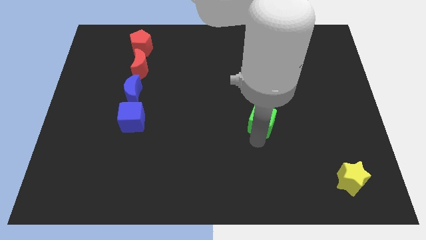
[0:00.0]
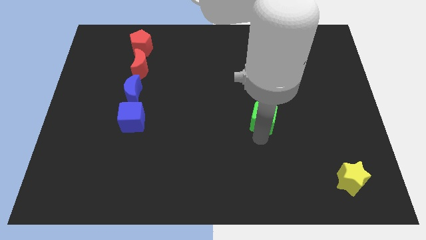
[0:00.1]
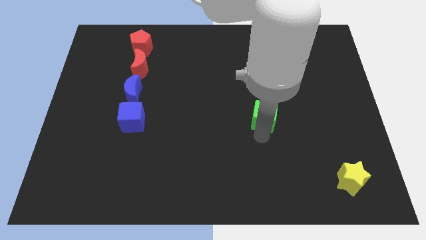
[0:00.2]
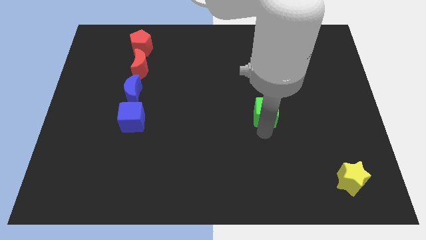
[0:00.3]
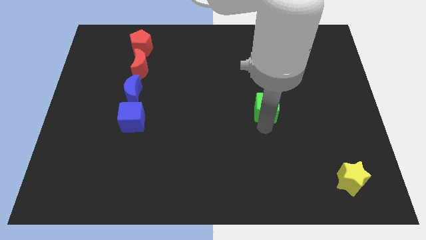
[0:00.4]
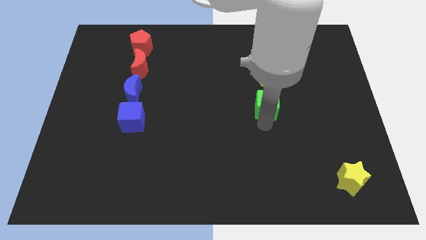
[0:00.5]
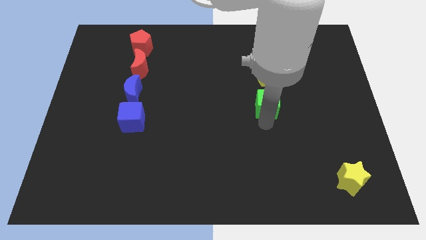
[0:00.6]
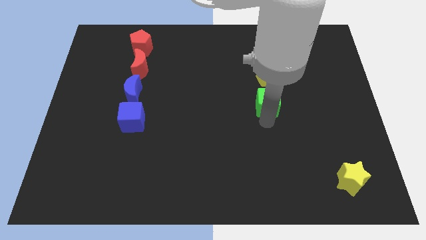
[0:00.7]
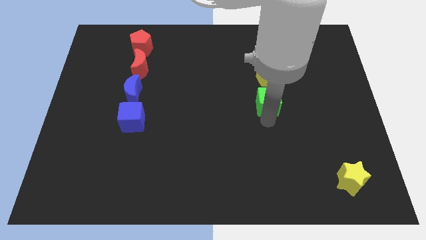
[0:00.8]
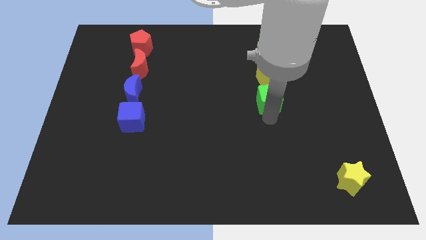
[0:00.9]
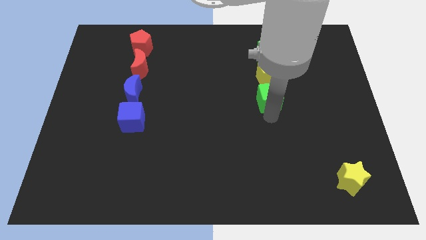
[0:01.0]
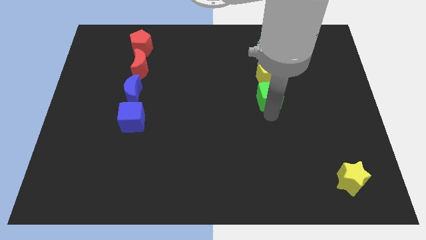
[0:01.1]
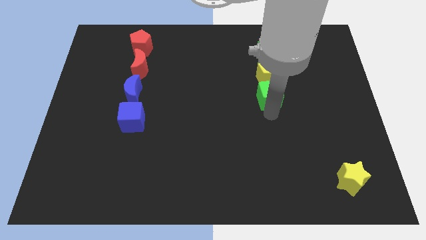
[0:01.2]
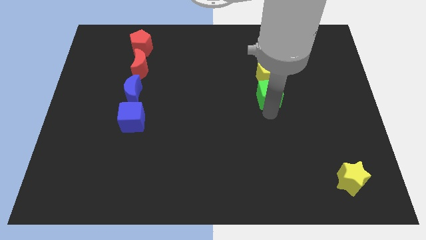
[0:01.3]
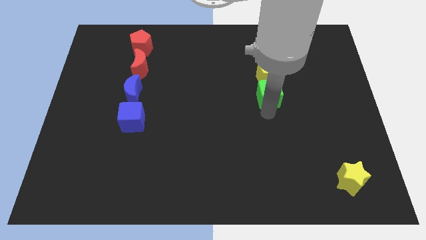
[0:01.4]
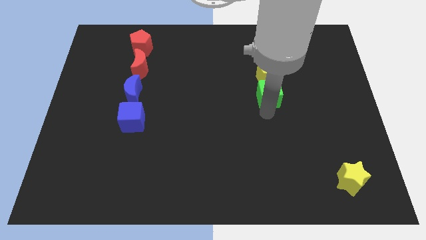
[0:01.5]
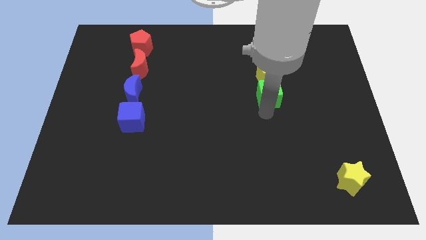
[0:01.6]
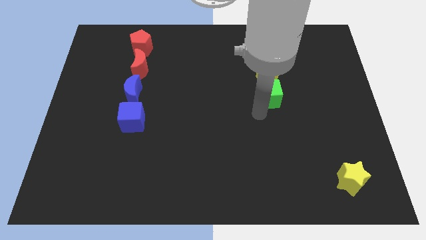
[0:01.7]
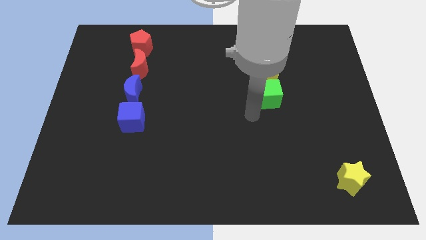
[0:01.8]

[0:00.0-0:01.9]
push green cube below yellow pentagon

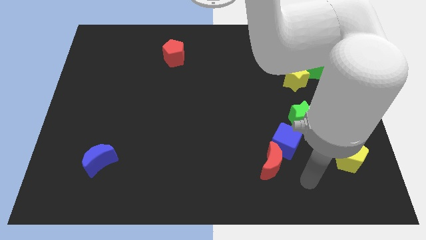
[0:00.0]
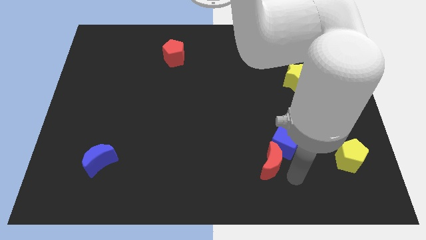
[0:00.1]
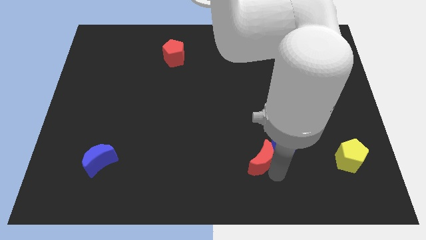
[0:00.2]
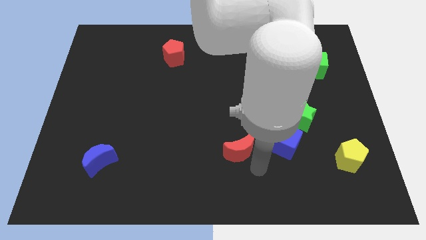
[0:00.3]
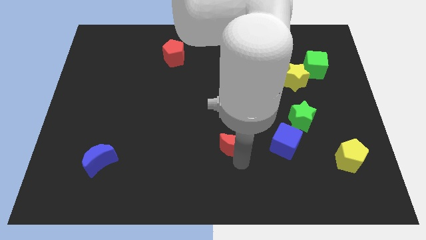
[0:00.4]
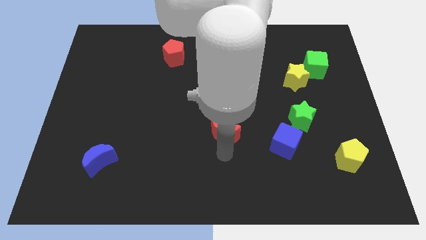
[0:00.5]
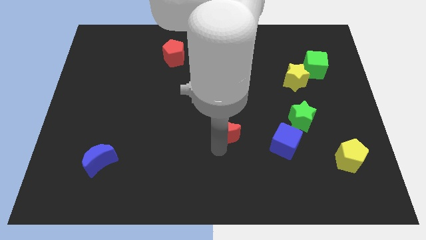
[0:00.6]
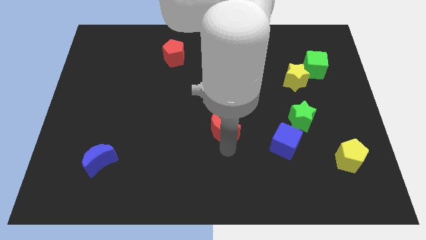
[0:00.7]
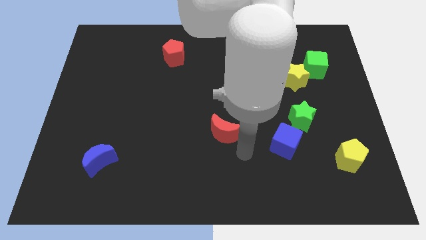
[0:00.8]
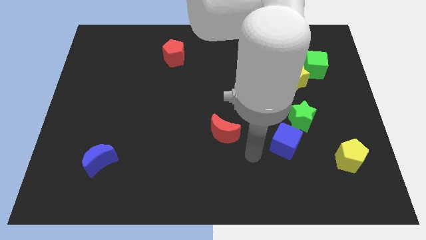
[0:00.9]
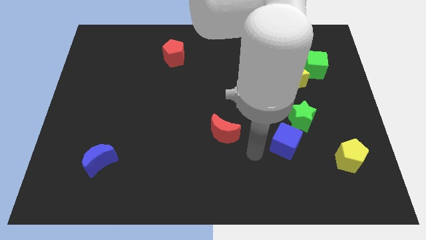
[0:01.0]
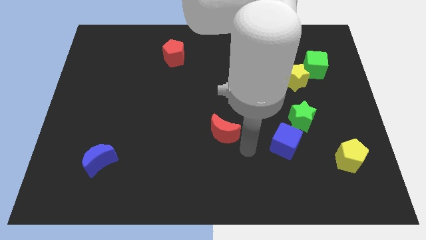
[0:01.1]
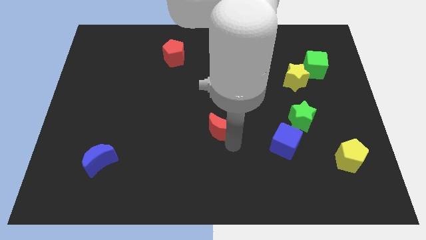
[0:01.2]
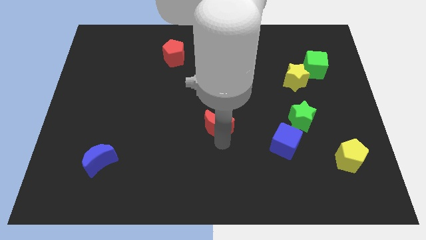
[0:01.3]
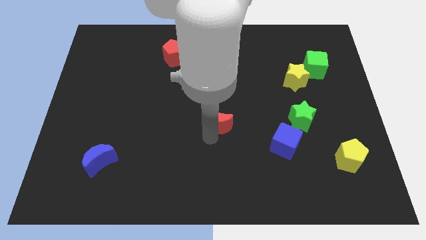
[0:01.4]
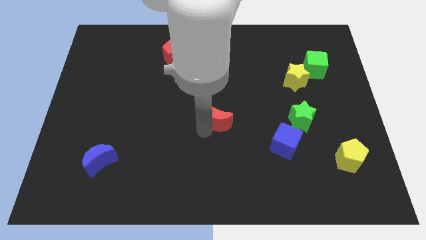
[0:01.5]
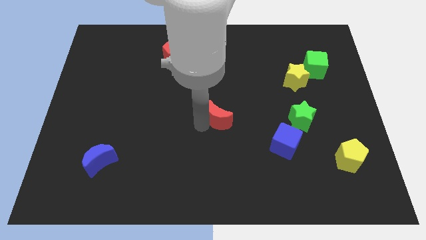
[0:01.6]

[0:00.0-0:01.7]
move red crescent upwards

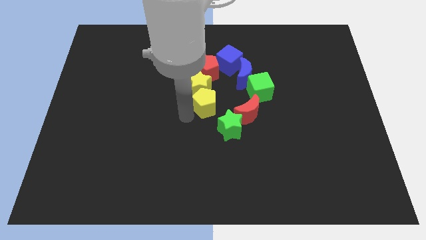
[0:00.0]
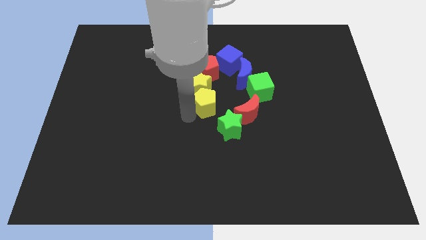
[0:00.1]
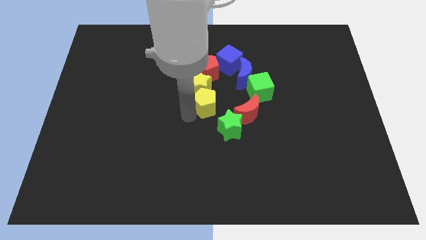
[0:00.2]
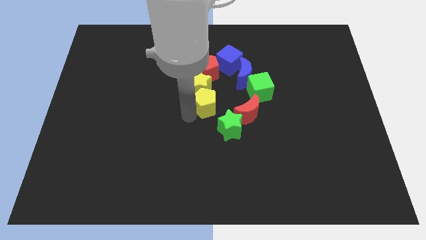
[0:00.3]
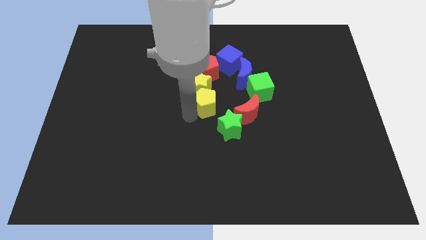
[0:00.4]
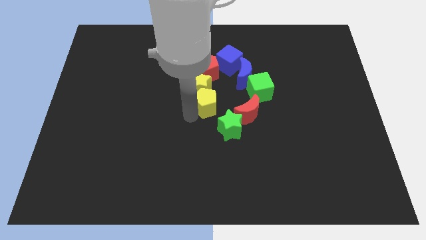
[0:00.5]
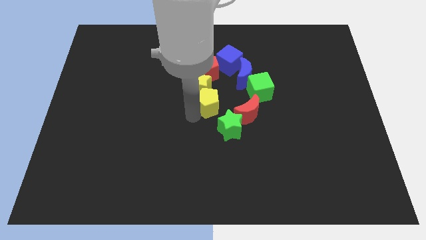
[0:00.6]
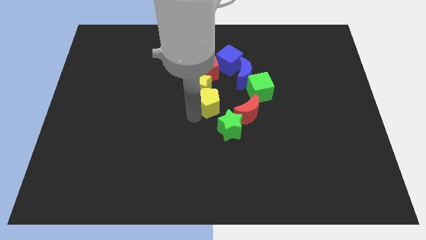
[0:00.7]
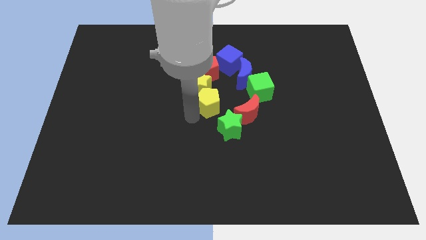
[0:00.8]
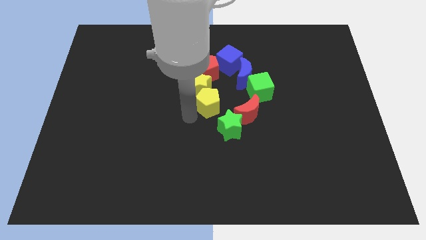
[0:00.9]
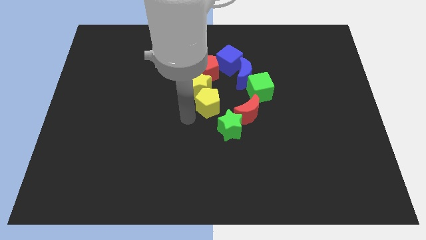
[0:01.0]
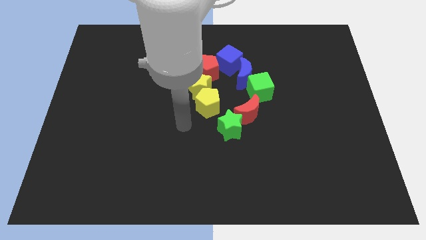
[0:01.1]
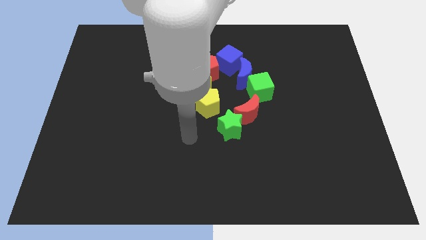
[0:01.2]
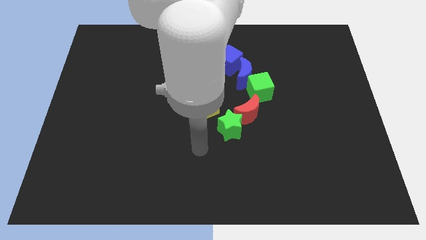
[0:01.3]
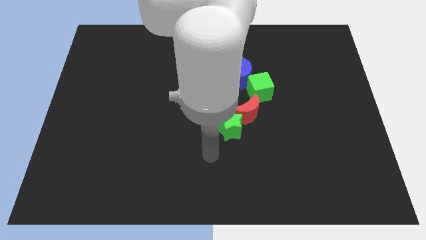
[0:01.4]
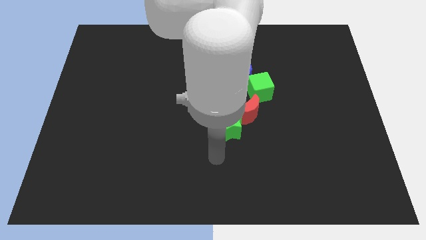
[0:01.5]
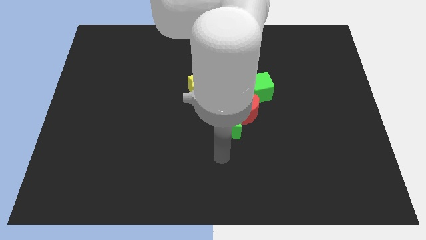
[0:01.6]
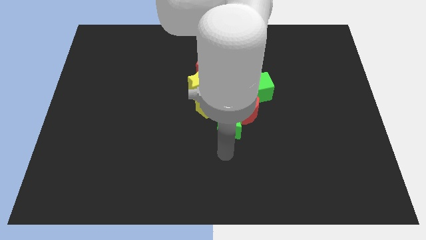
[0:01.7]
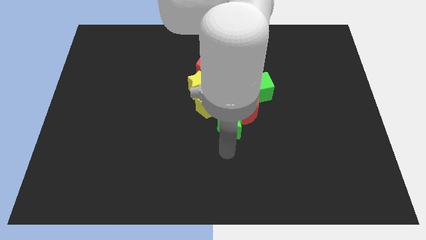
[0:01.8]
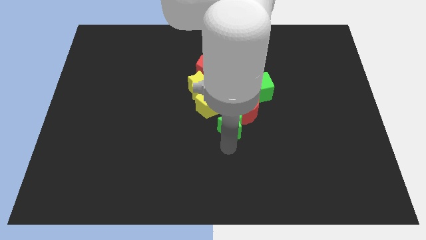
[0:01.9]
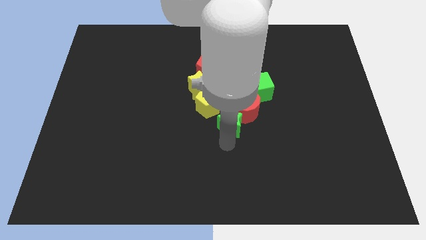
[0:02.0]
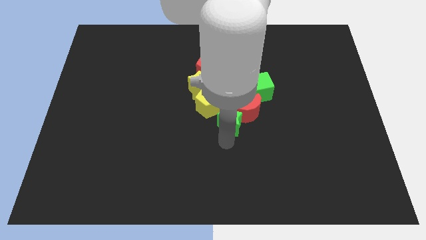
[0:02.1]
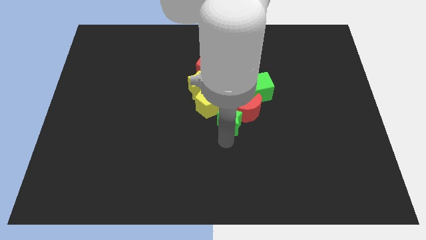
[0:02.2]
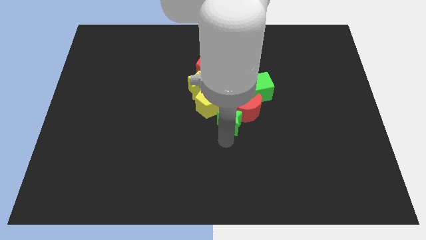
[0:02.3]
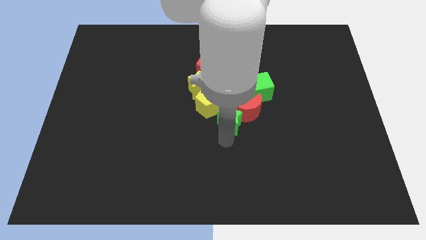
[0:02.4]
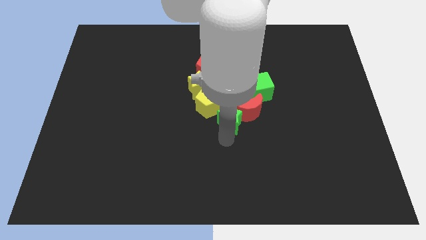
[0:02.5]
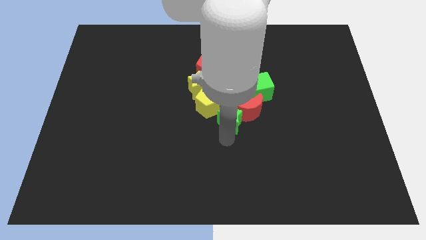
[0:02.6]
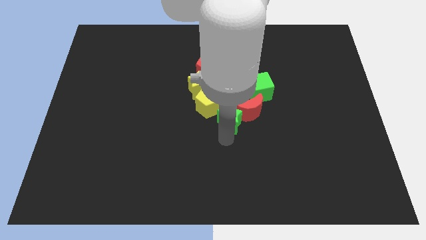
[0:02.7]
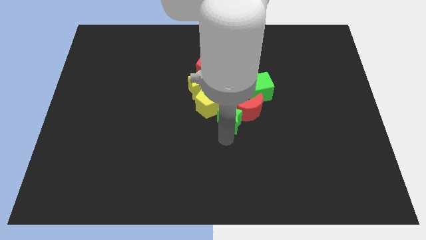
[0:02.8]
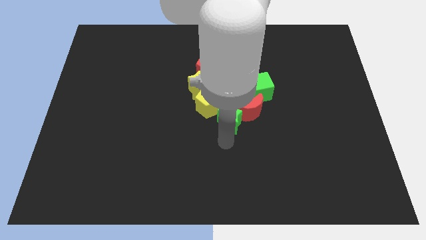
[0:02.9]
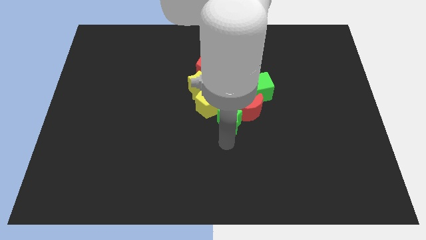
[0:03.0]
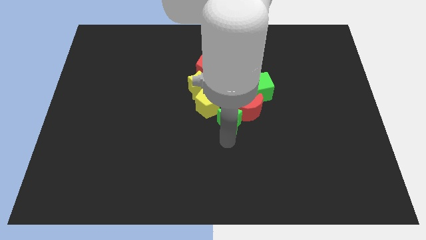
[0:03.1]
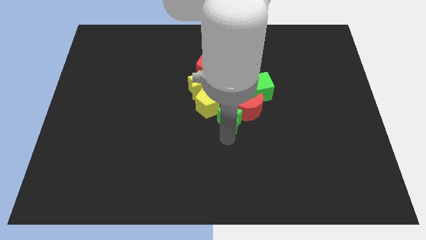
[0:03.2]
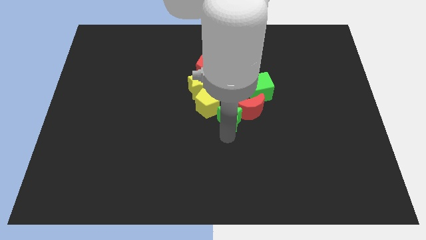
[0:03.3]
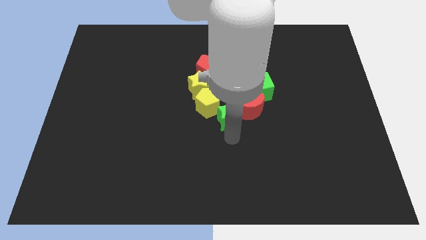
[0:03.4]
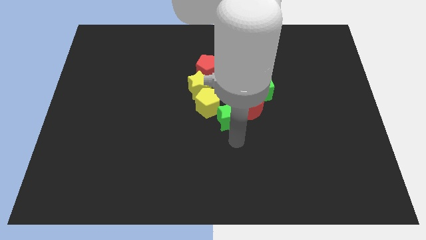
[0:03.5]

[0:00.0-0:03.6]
push green star slightly towards up
